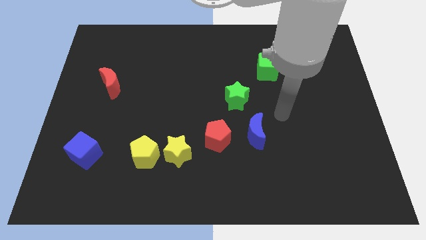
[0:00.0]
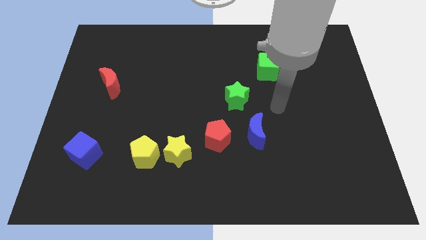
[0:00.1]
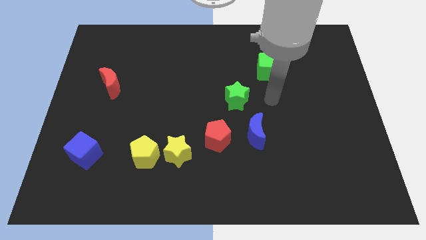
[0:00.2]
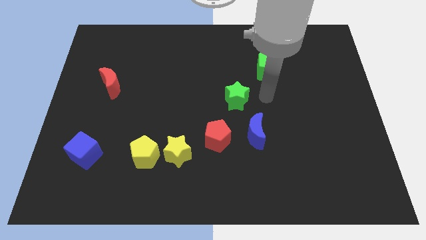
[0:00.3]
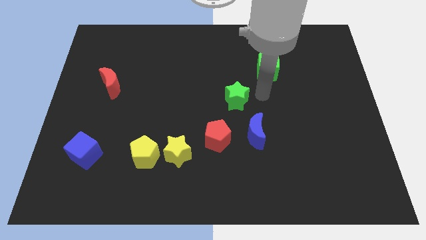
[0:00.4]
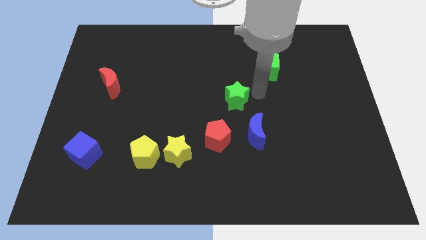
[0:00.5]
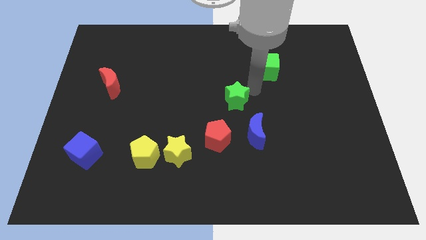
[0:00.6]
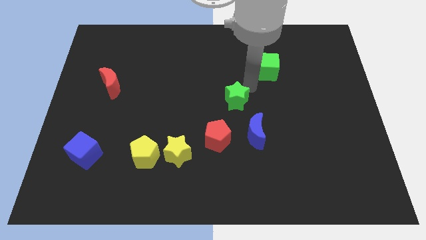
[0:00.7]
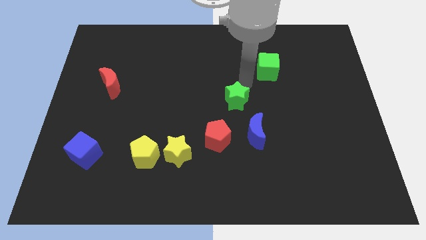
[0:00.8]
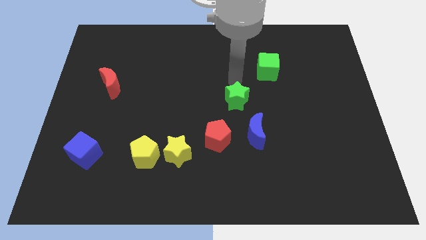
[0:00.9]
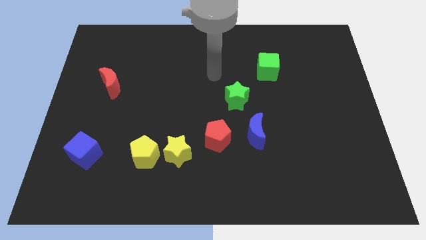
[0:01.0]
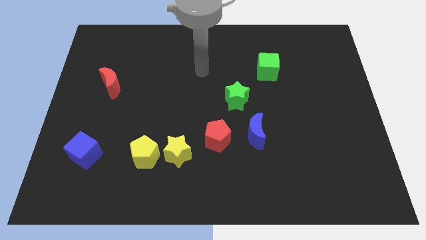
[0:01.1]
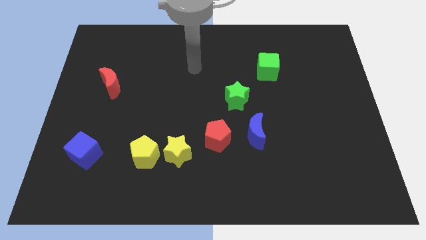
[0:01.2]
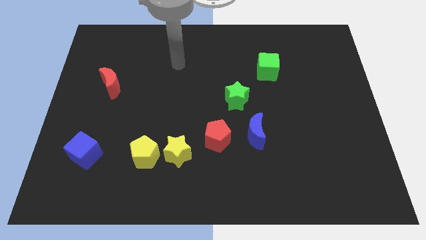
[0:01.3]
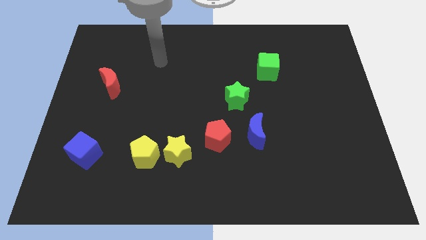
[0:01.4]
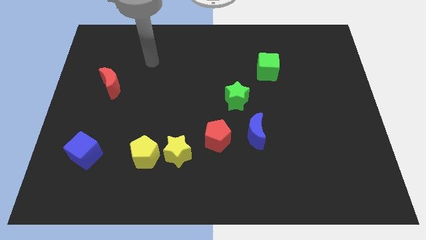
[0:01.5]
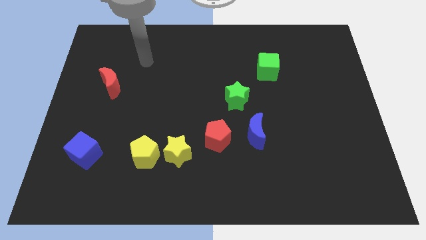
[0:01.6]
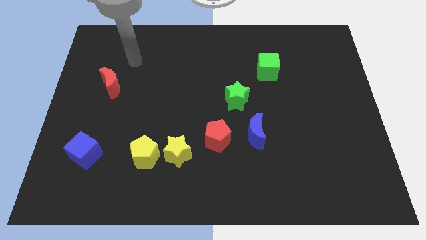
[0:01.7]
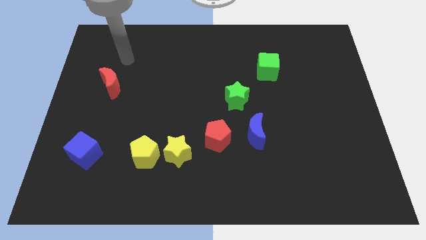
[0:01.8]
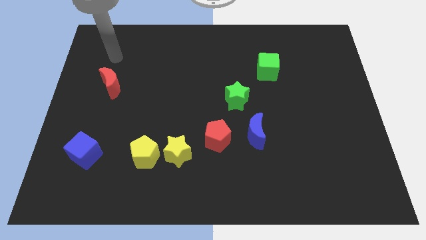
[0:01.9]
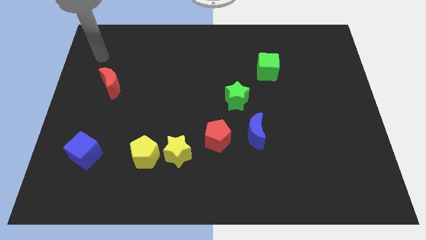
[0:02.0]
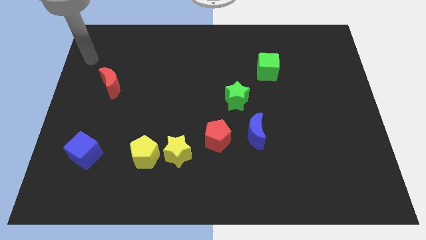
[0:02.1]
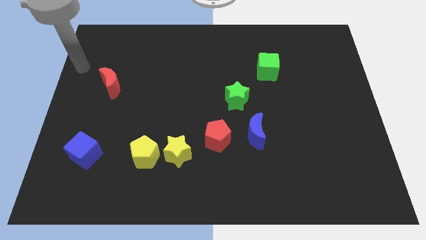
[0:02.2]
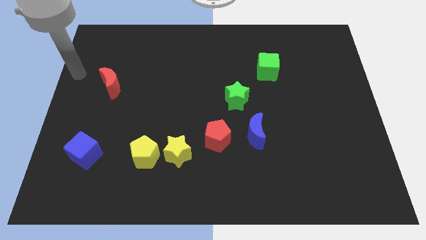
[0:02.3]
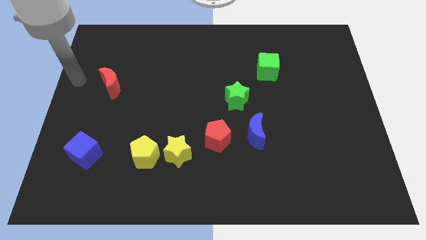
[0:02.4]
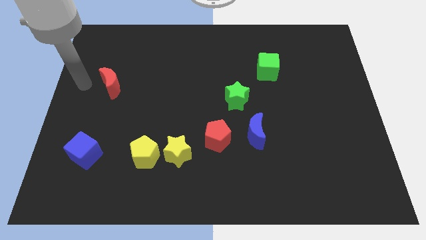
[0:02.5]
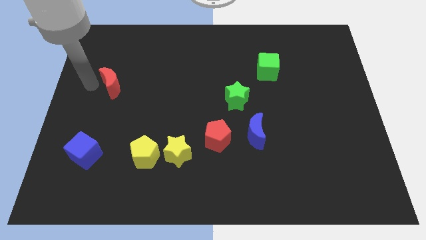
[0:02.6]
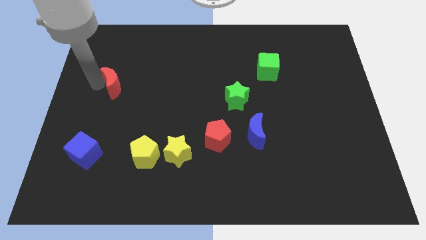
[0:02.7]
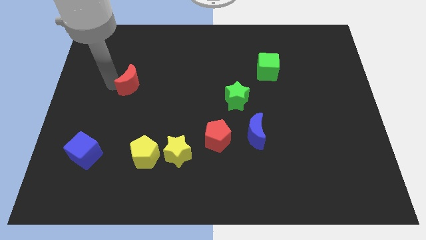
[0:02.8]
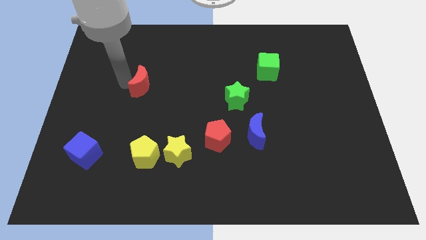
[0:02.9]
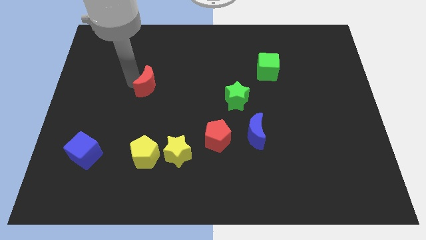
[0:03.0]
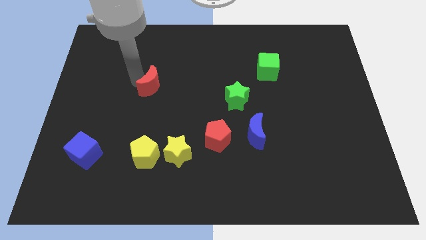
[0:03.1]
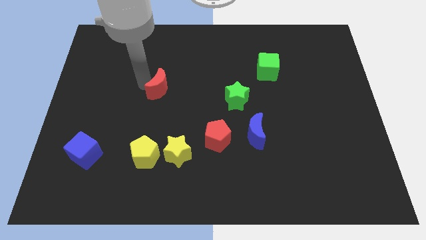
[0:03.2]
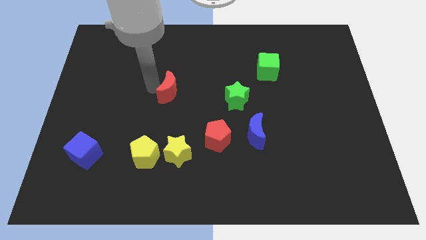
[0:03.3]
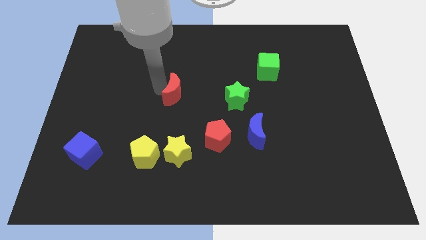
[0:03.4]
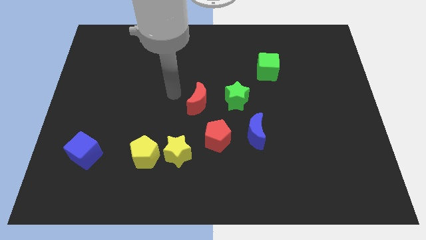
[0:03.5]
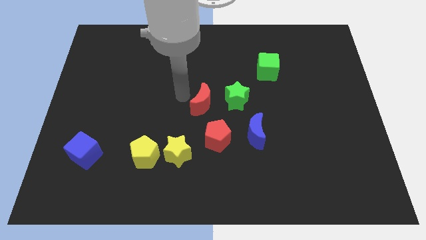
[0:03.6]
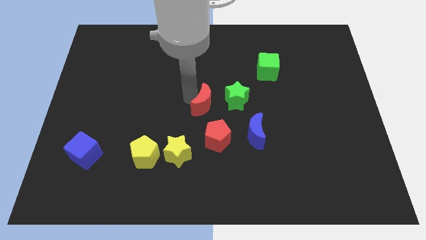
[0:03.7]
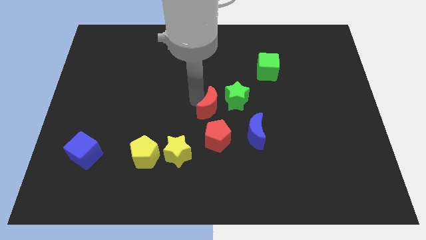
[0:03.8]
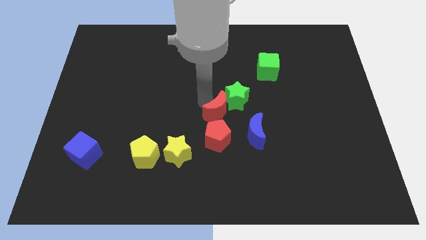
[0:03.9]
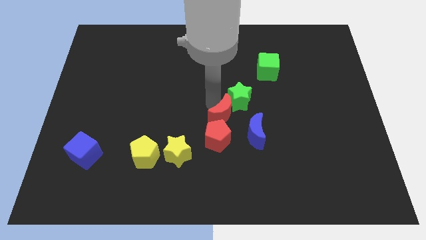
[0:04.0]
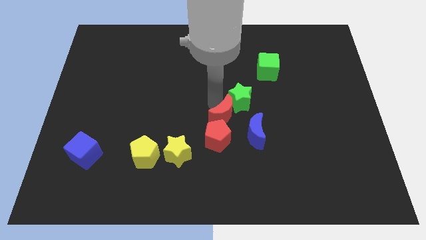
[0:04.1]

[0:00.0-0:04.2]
move the red moon to the green star

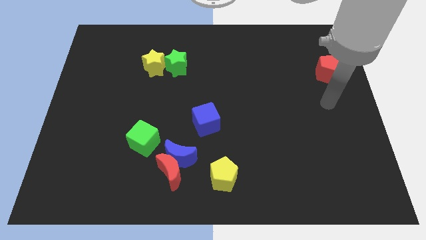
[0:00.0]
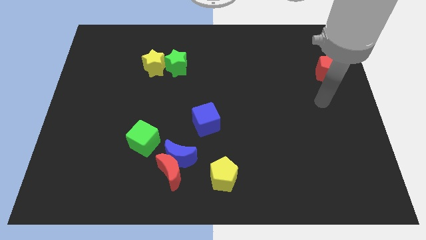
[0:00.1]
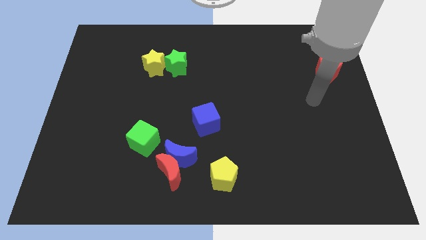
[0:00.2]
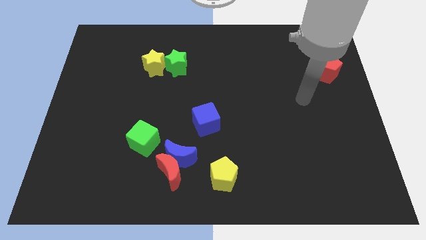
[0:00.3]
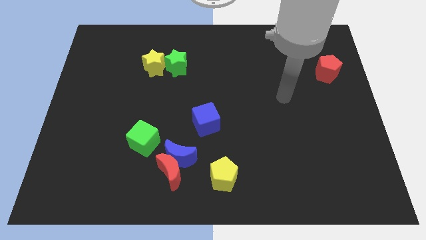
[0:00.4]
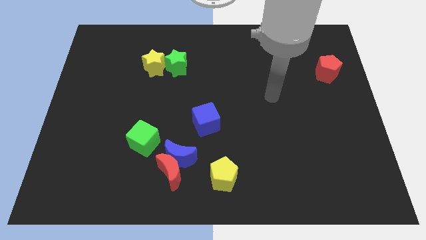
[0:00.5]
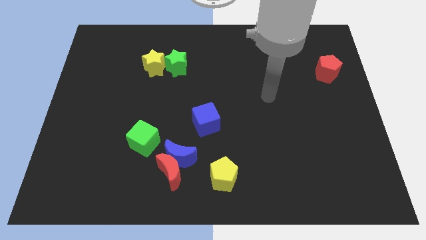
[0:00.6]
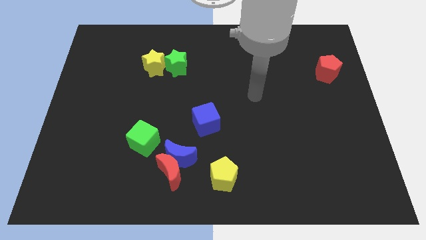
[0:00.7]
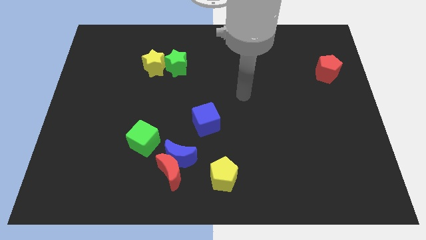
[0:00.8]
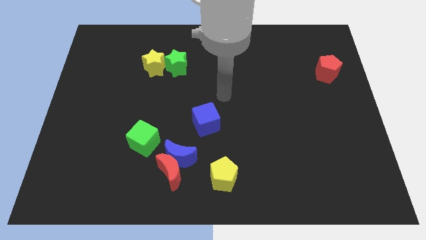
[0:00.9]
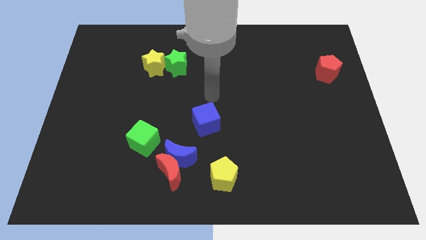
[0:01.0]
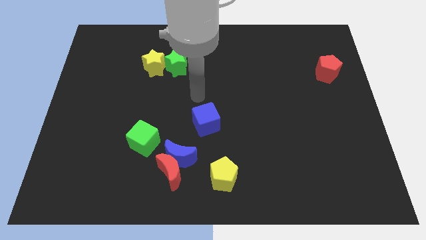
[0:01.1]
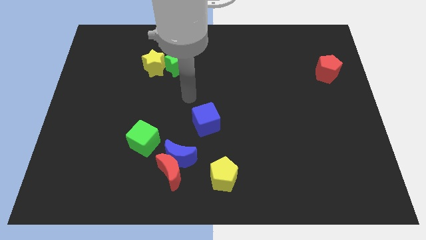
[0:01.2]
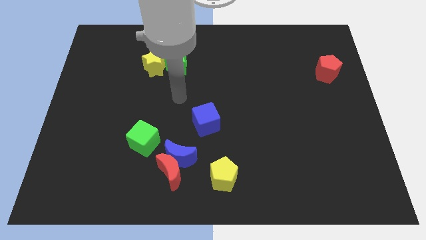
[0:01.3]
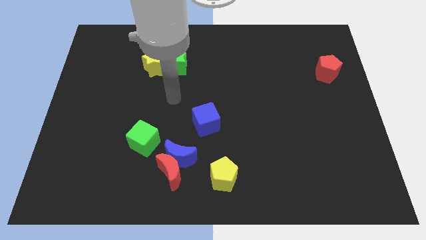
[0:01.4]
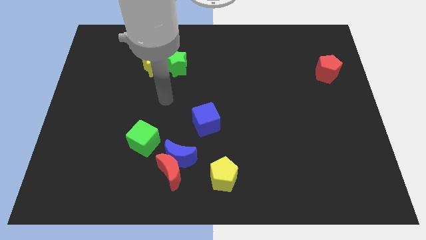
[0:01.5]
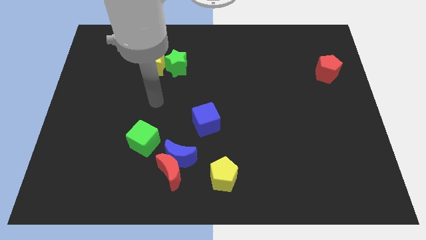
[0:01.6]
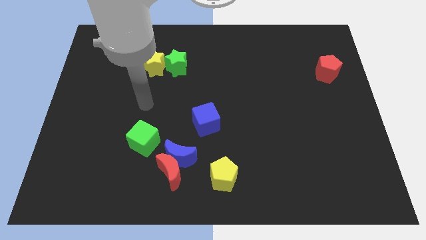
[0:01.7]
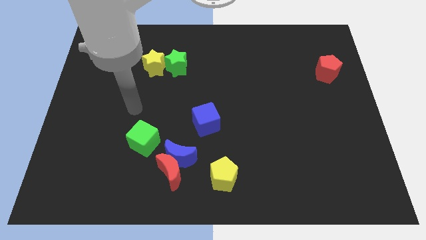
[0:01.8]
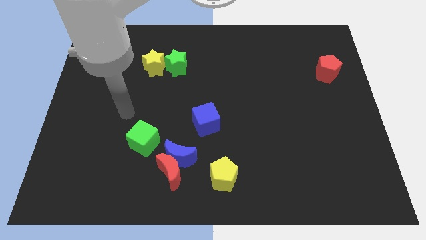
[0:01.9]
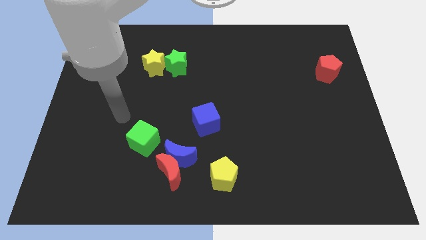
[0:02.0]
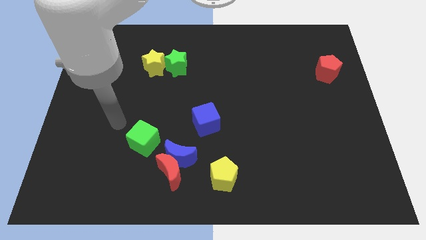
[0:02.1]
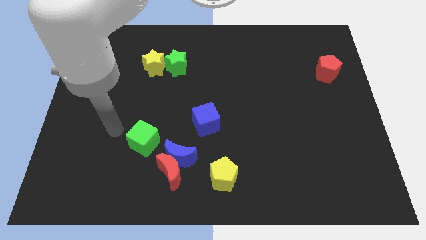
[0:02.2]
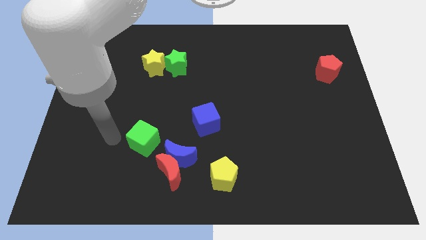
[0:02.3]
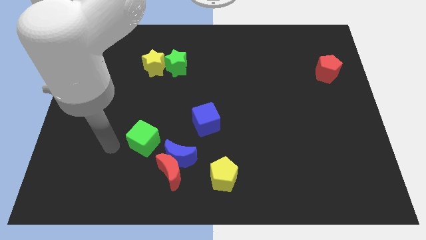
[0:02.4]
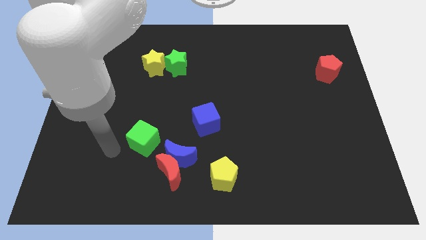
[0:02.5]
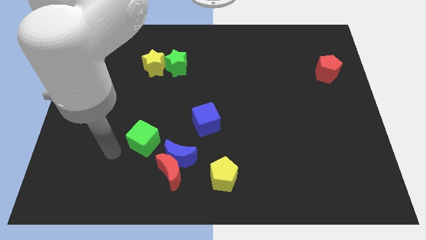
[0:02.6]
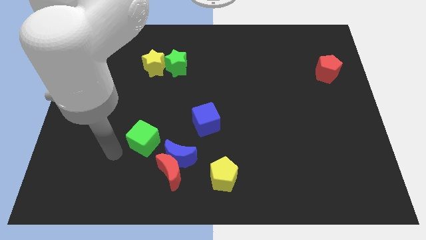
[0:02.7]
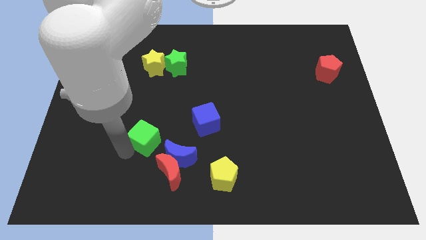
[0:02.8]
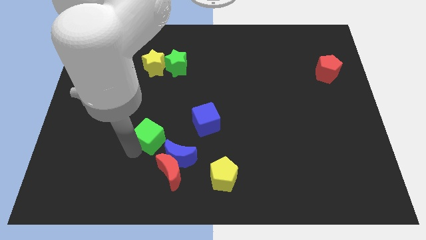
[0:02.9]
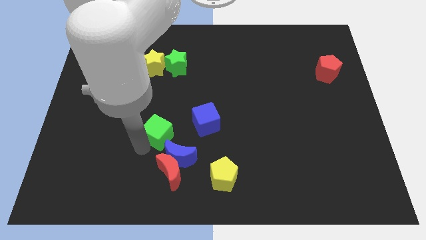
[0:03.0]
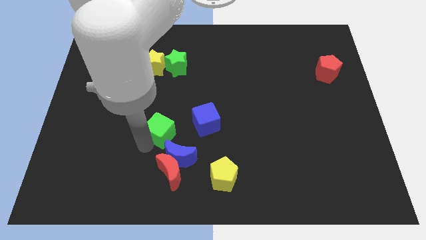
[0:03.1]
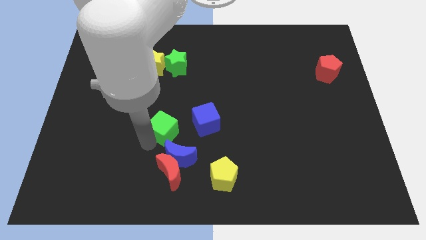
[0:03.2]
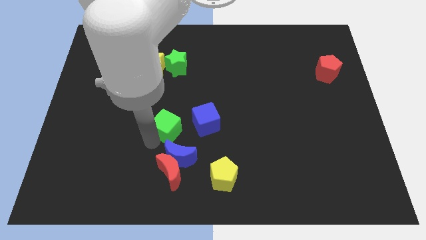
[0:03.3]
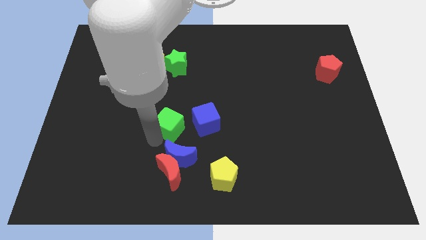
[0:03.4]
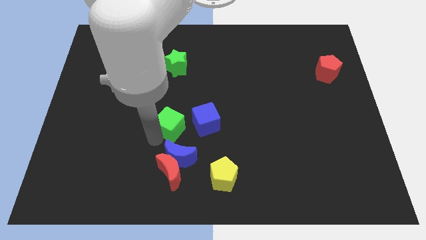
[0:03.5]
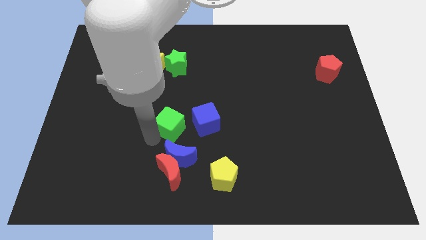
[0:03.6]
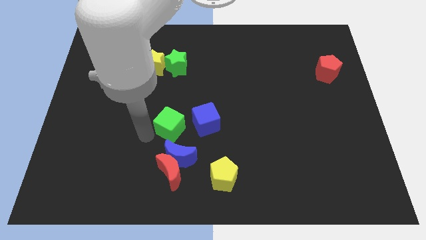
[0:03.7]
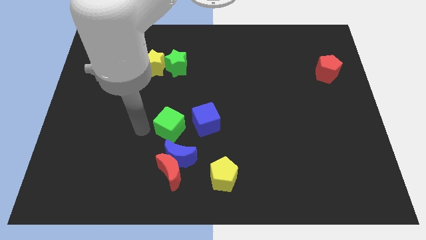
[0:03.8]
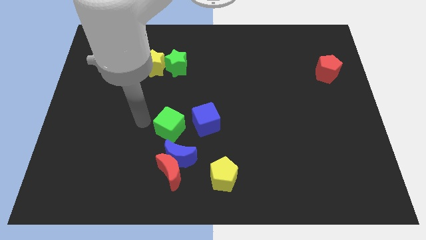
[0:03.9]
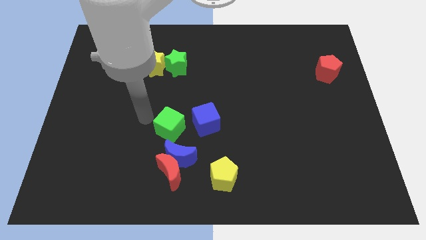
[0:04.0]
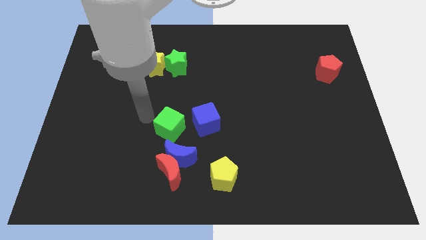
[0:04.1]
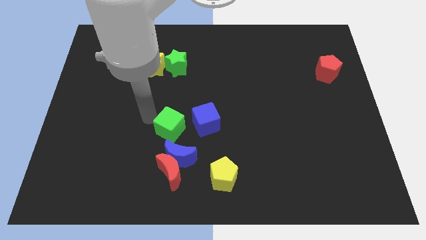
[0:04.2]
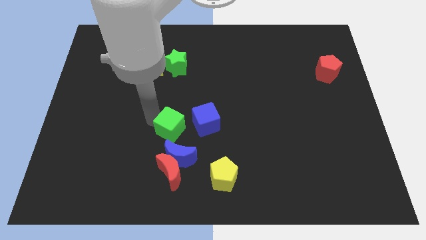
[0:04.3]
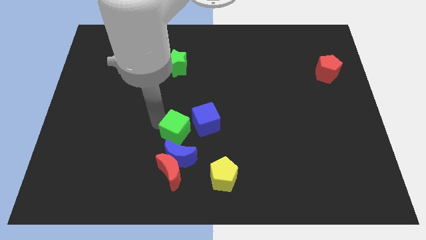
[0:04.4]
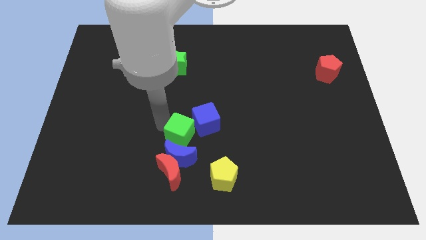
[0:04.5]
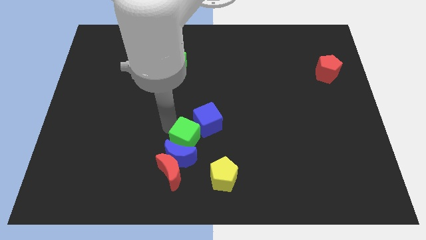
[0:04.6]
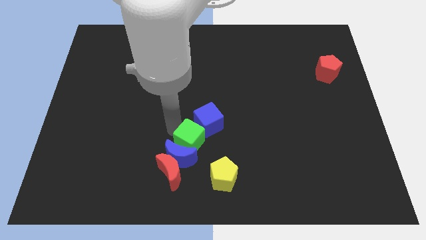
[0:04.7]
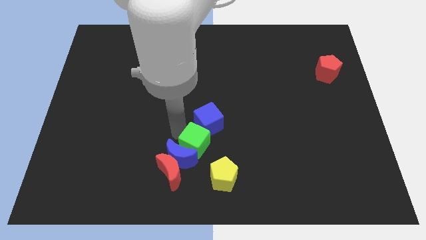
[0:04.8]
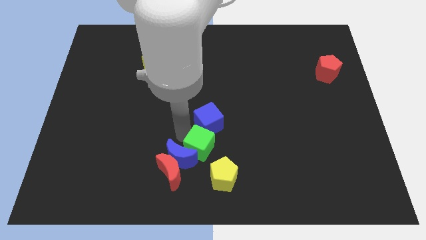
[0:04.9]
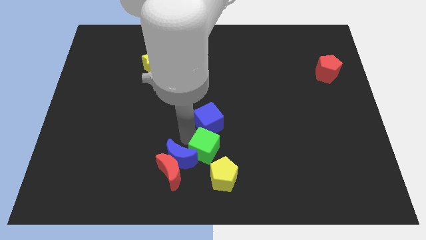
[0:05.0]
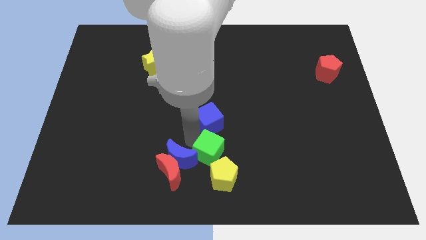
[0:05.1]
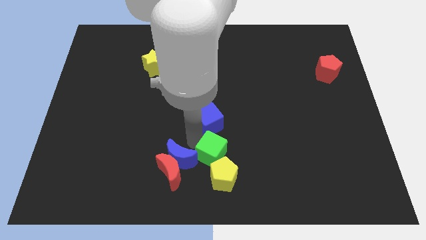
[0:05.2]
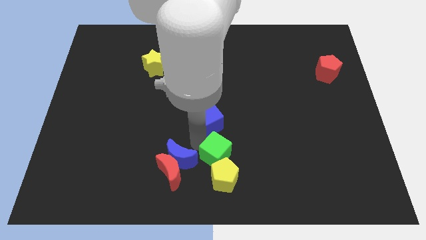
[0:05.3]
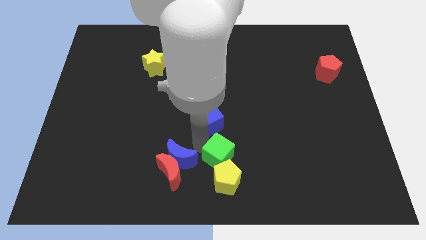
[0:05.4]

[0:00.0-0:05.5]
put the green cube close to the yellow pentagon
